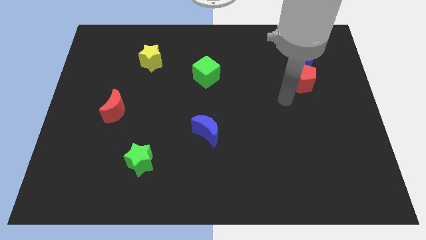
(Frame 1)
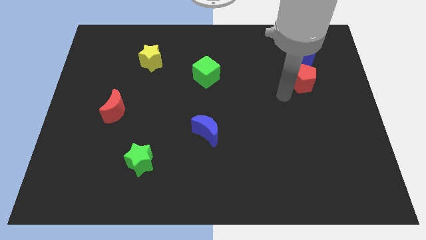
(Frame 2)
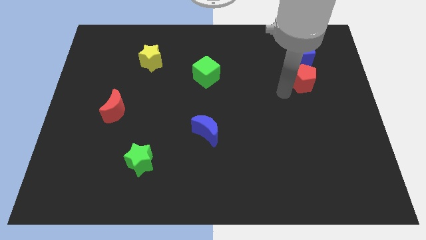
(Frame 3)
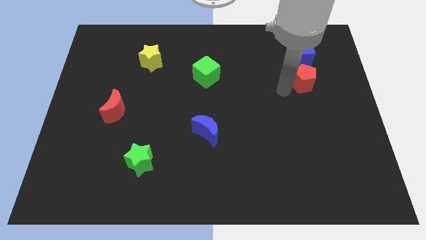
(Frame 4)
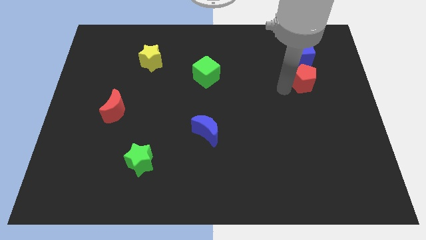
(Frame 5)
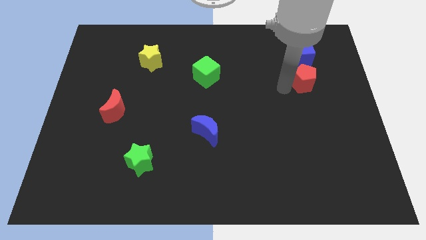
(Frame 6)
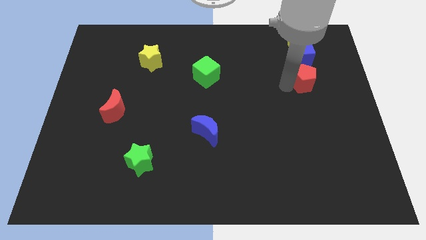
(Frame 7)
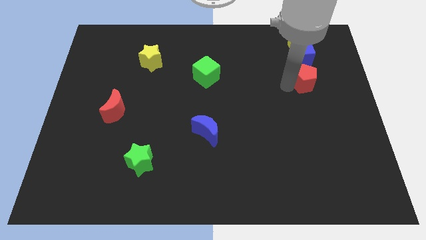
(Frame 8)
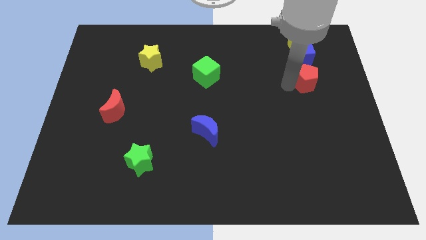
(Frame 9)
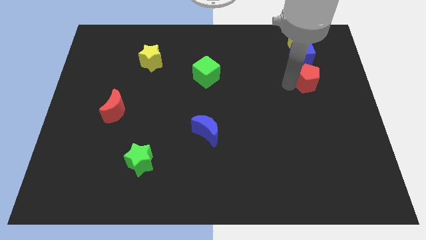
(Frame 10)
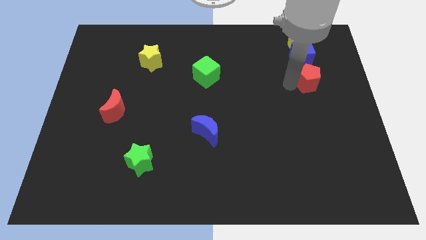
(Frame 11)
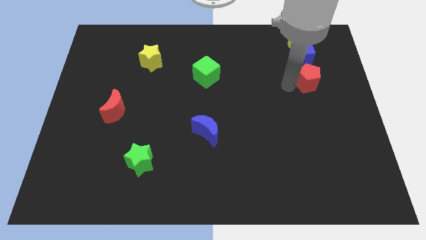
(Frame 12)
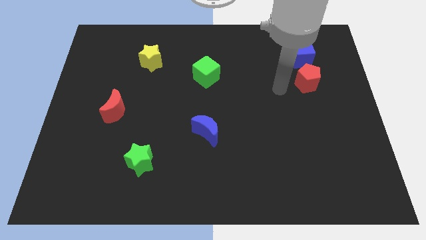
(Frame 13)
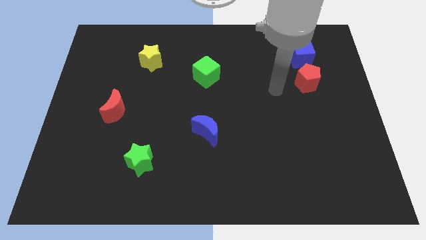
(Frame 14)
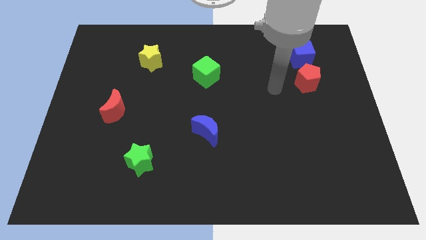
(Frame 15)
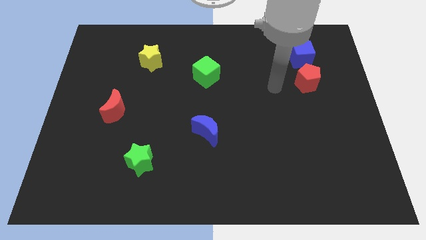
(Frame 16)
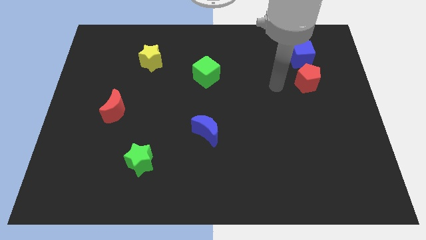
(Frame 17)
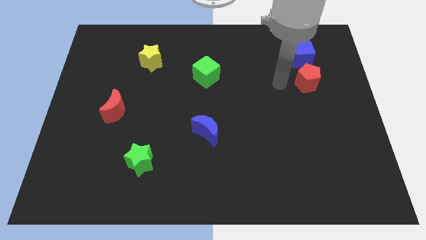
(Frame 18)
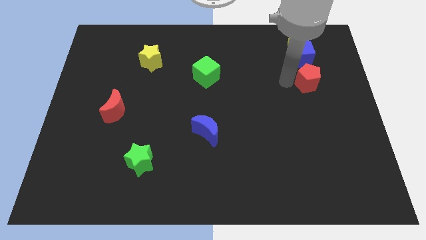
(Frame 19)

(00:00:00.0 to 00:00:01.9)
add the red pentagon to the vertical line of the yellow pentagon and the blue square

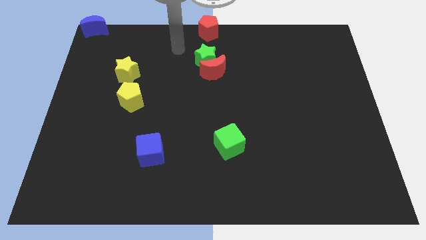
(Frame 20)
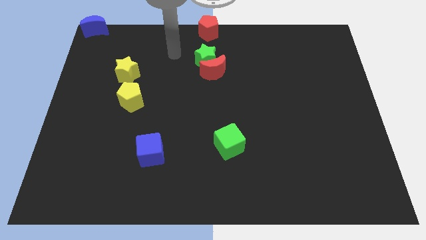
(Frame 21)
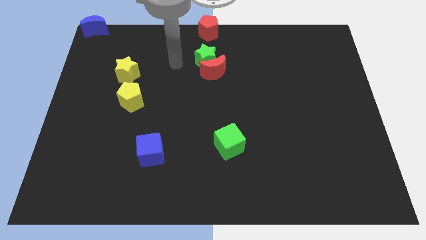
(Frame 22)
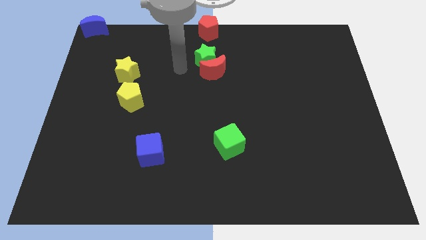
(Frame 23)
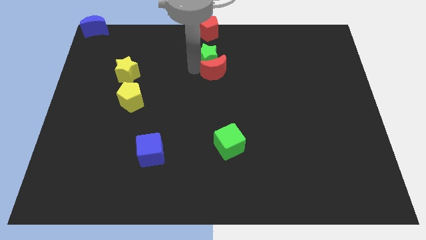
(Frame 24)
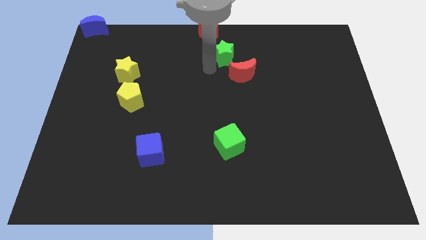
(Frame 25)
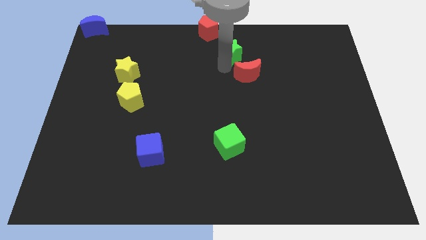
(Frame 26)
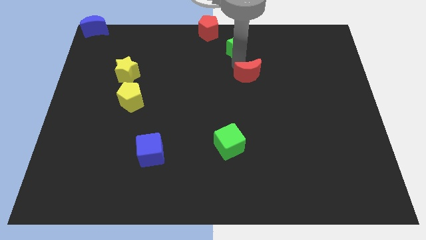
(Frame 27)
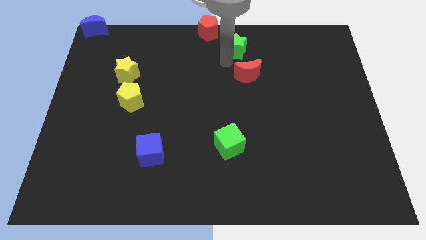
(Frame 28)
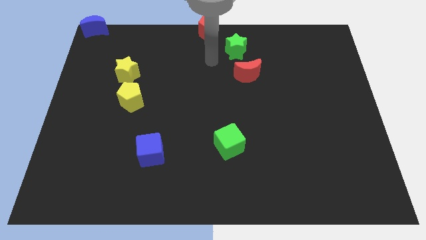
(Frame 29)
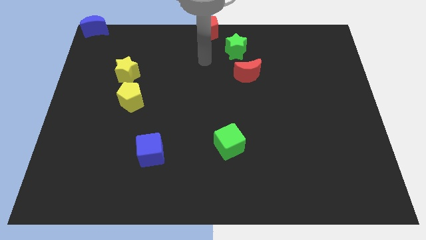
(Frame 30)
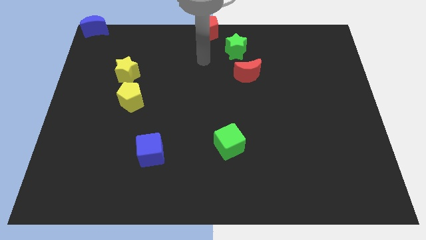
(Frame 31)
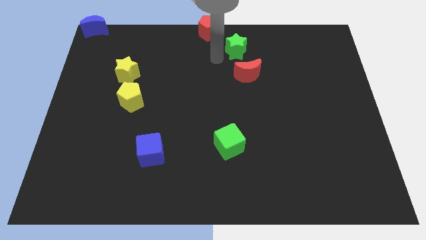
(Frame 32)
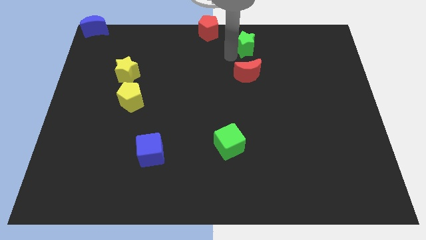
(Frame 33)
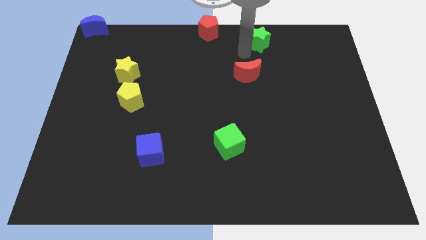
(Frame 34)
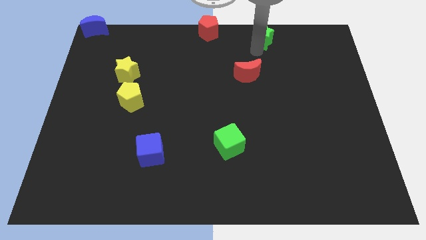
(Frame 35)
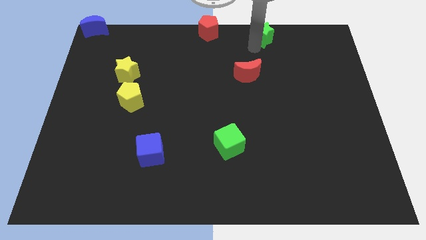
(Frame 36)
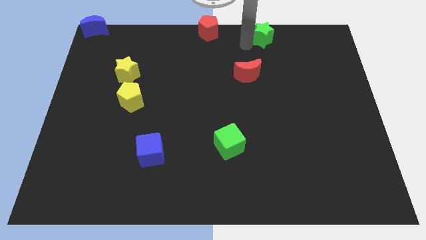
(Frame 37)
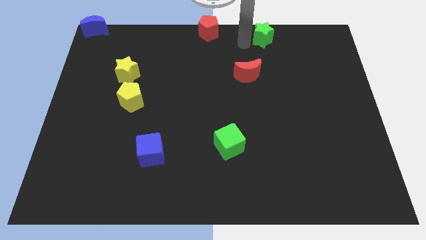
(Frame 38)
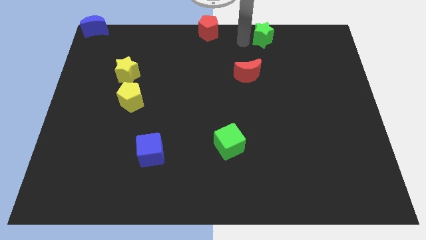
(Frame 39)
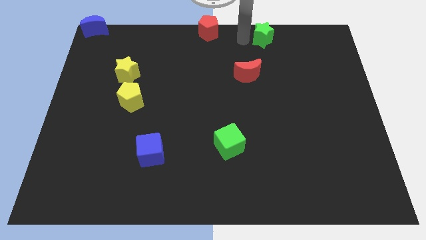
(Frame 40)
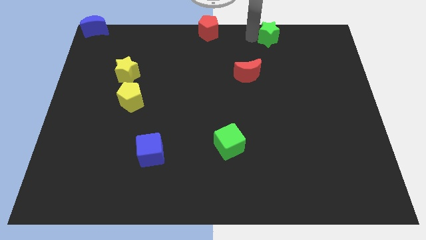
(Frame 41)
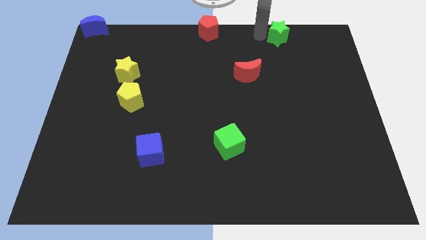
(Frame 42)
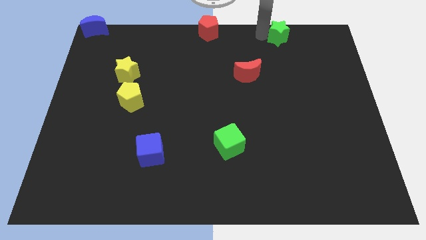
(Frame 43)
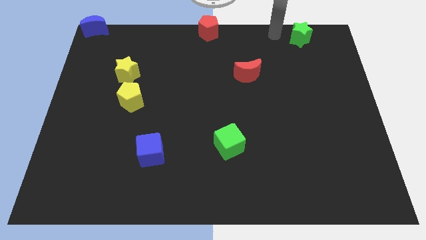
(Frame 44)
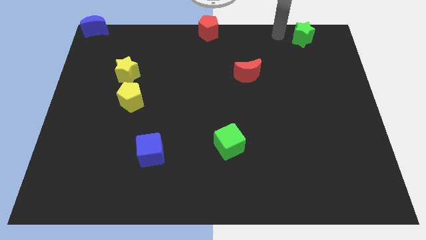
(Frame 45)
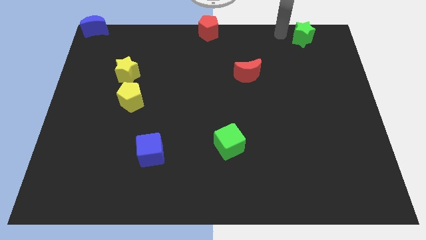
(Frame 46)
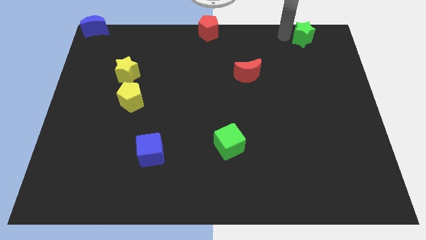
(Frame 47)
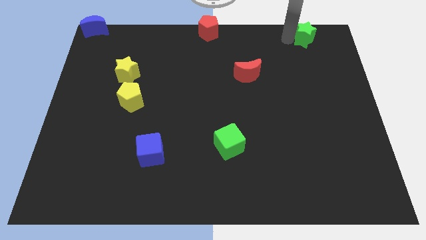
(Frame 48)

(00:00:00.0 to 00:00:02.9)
separate the green star from the red moon

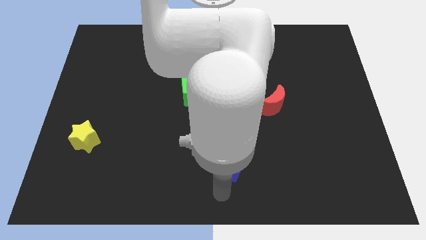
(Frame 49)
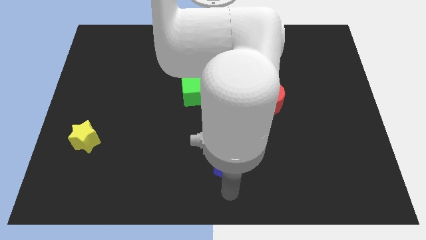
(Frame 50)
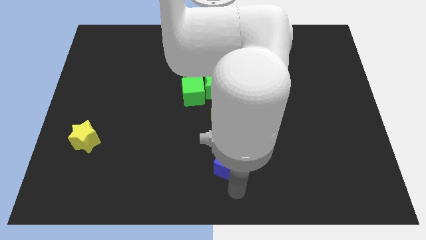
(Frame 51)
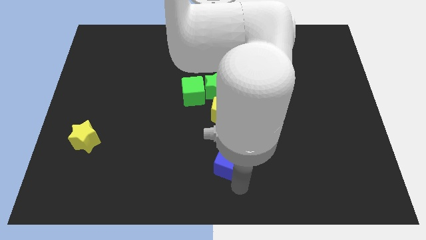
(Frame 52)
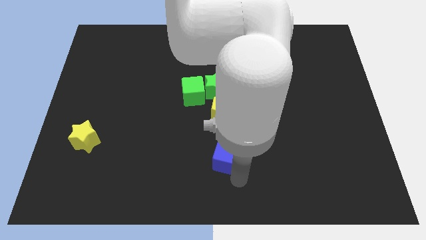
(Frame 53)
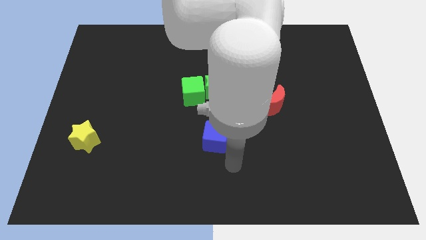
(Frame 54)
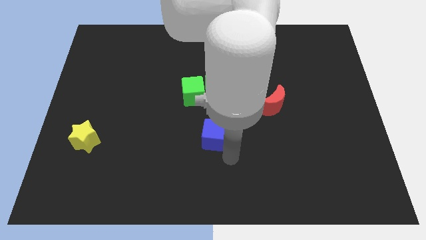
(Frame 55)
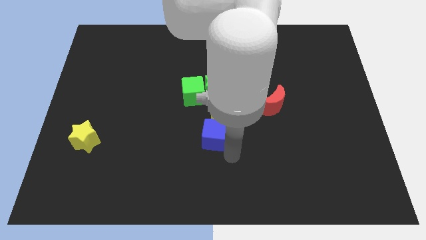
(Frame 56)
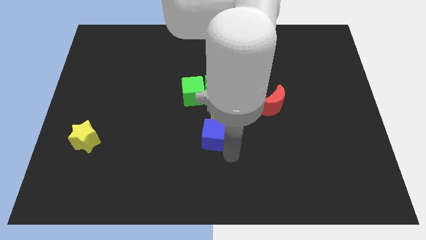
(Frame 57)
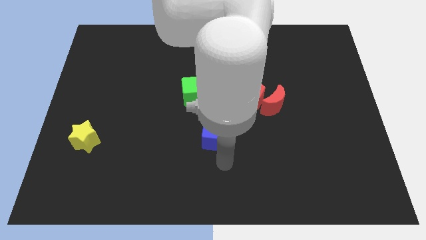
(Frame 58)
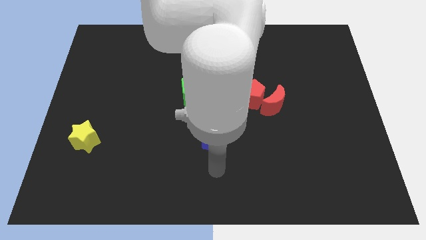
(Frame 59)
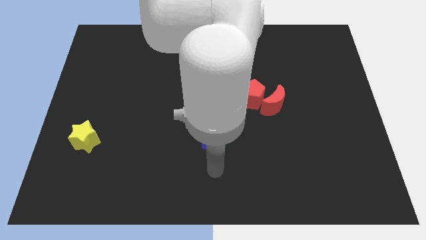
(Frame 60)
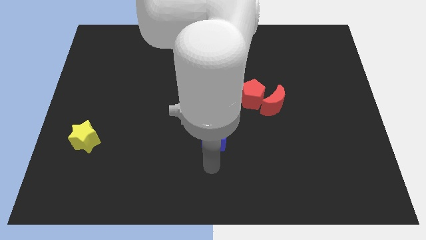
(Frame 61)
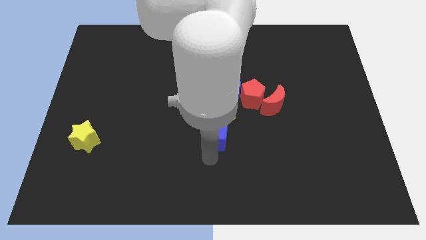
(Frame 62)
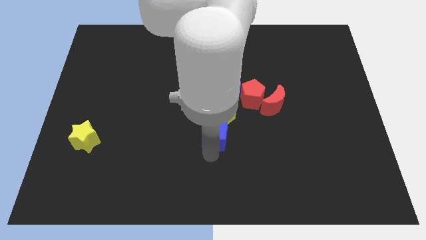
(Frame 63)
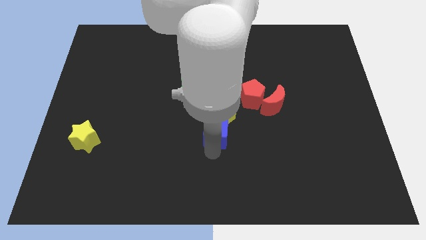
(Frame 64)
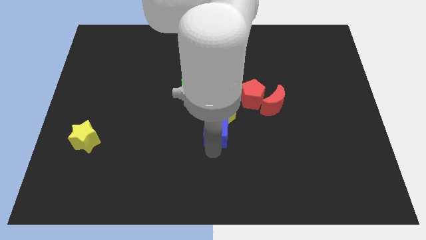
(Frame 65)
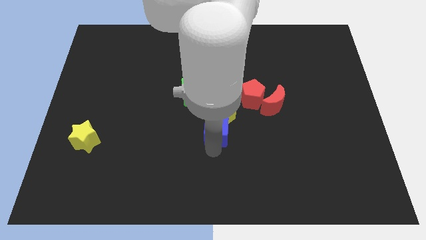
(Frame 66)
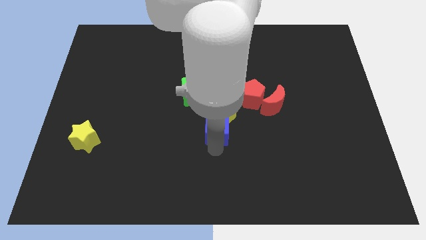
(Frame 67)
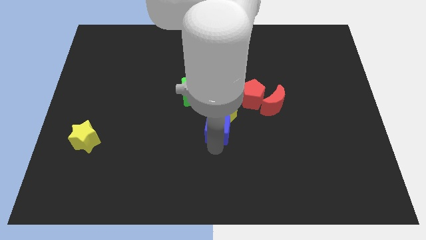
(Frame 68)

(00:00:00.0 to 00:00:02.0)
push the blue cube into the yellow pentagon

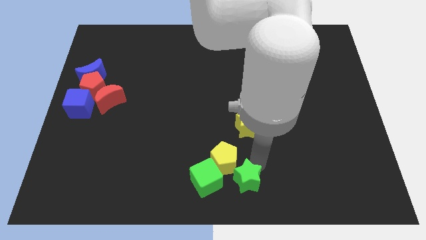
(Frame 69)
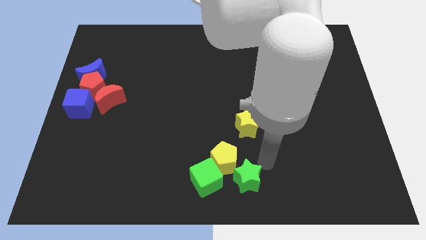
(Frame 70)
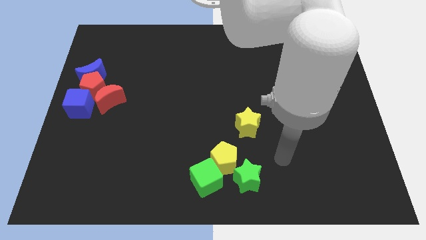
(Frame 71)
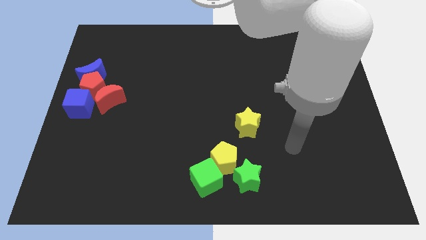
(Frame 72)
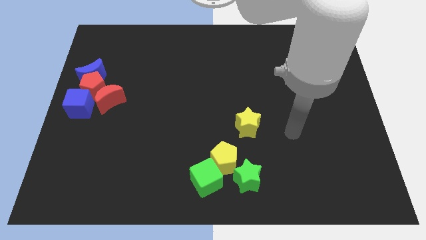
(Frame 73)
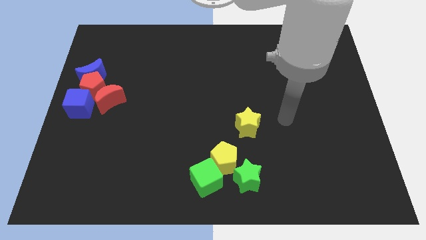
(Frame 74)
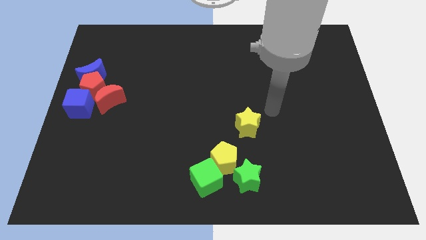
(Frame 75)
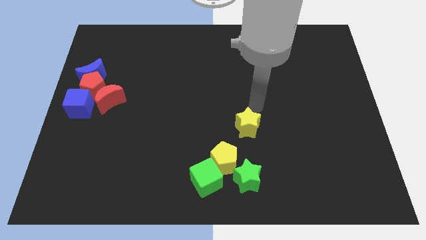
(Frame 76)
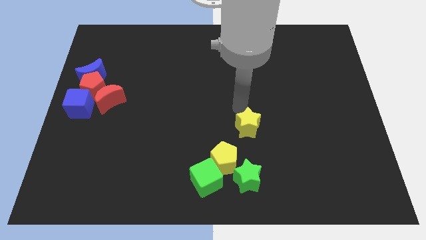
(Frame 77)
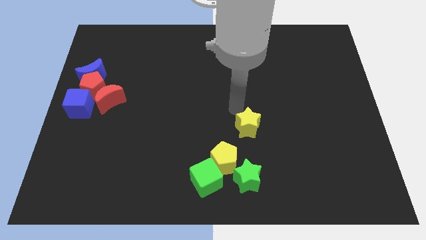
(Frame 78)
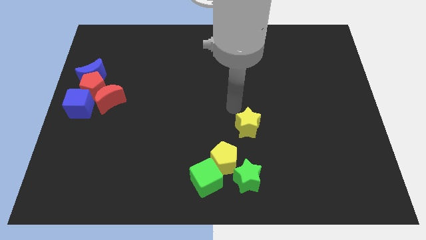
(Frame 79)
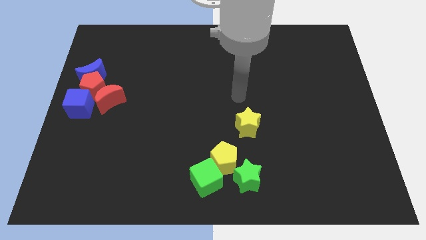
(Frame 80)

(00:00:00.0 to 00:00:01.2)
move your arm to the top left of yellow star

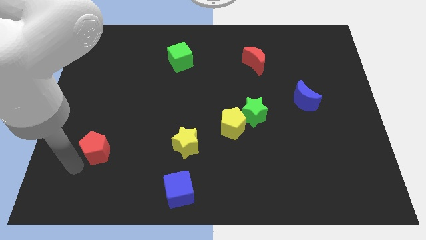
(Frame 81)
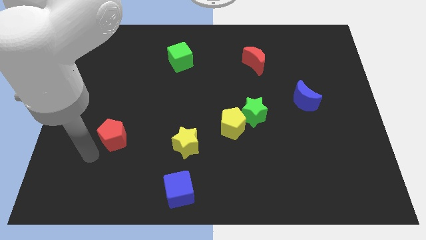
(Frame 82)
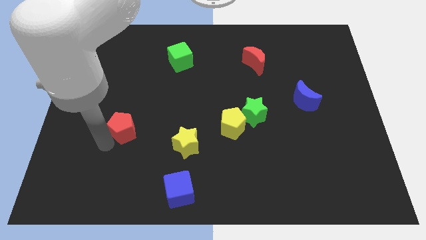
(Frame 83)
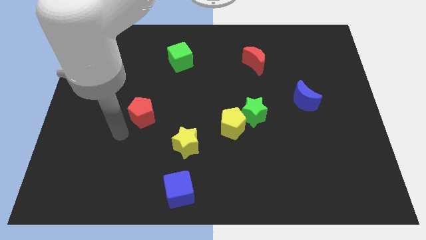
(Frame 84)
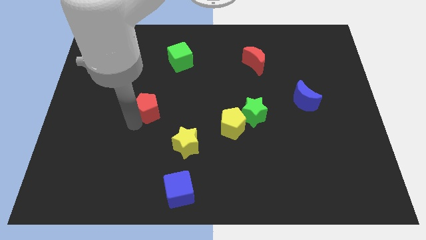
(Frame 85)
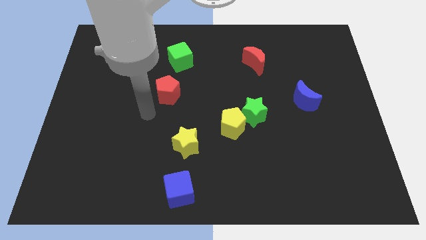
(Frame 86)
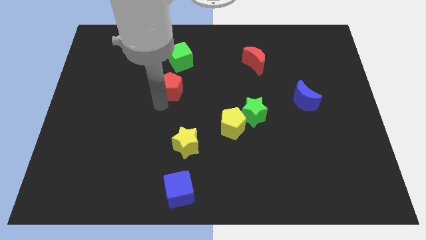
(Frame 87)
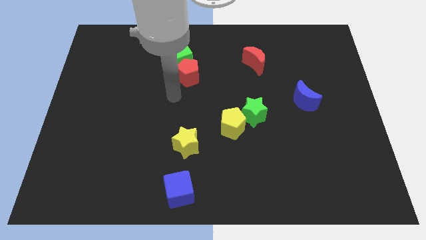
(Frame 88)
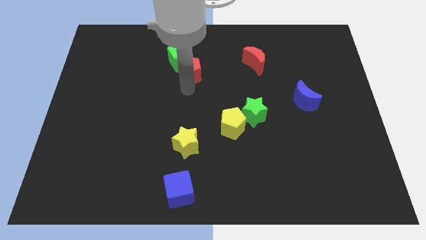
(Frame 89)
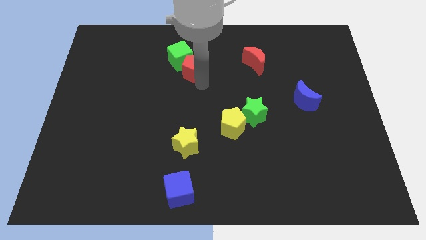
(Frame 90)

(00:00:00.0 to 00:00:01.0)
push the red pentagon diagonal towards the green cube
